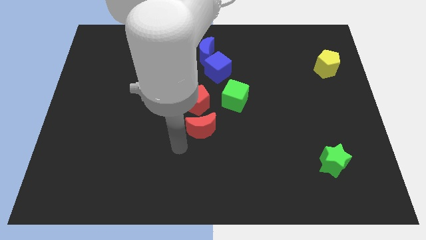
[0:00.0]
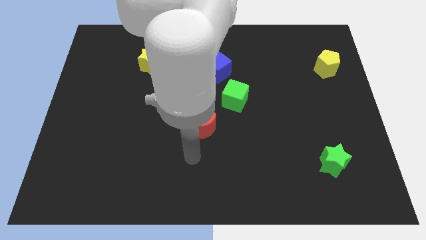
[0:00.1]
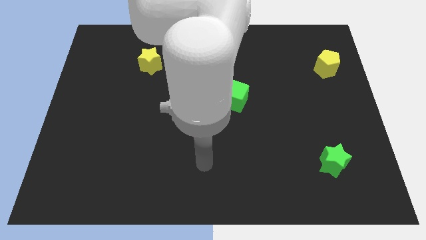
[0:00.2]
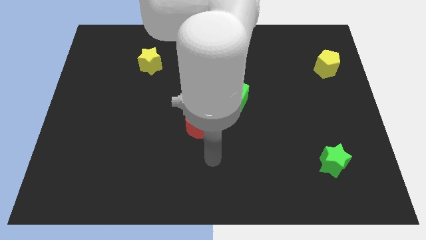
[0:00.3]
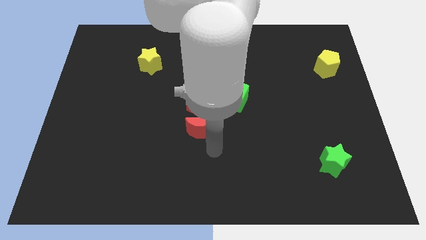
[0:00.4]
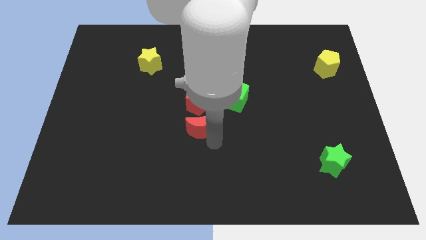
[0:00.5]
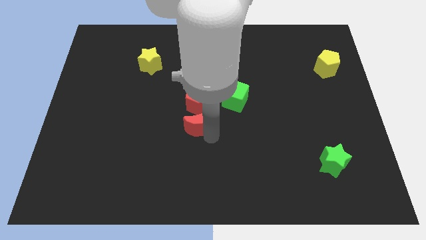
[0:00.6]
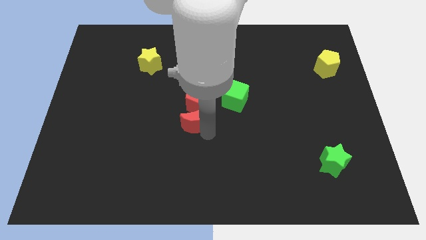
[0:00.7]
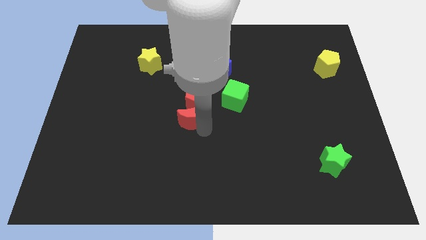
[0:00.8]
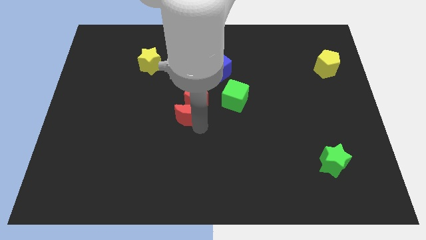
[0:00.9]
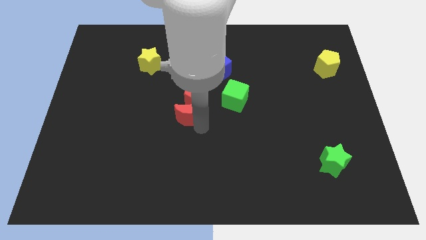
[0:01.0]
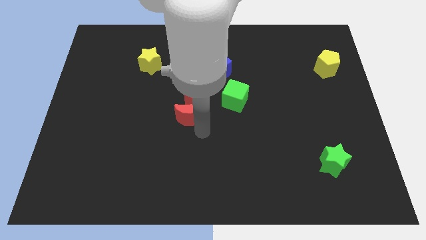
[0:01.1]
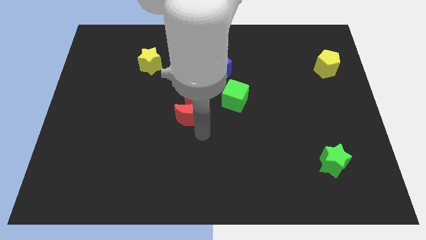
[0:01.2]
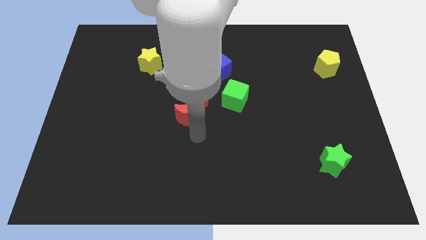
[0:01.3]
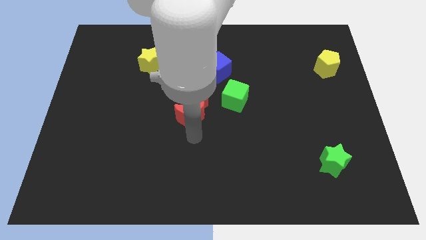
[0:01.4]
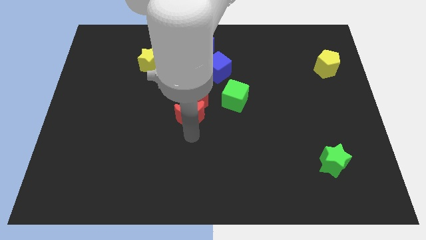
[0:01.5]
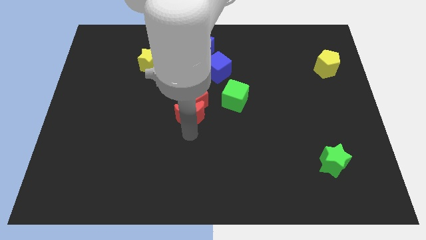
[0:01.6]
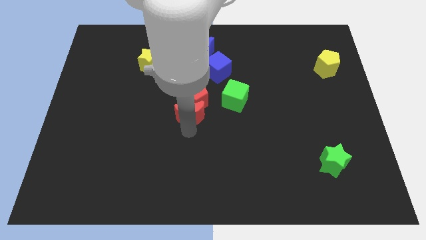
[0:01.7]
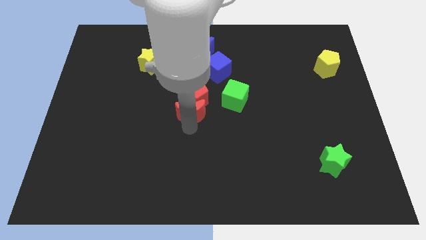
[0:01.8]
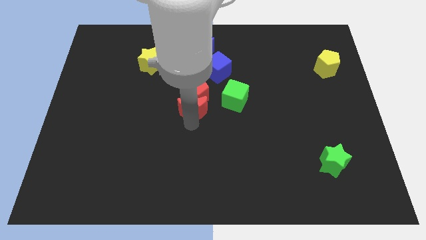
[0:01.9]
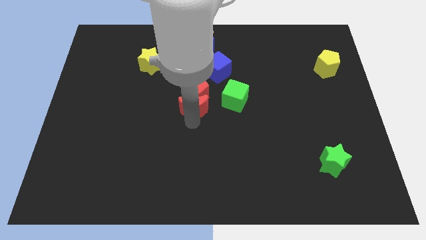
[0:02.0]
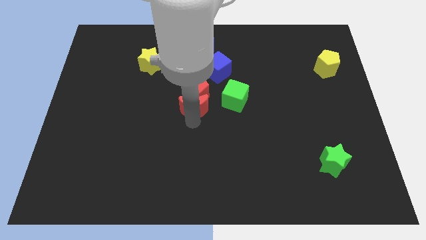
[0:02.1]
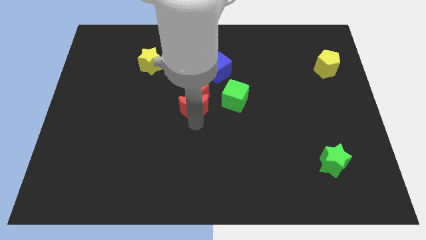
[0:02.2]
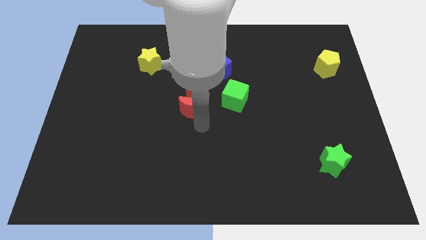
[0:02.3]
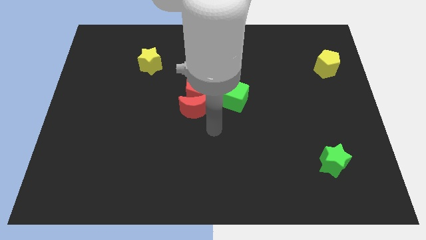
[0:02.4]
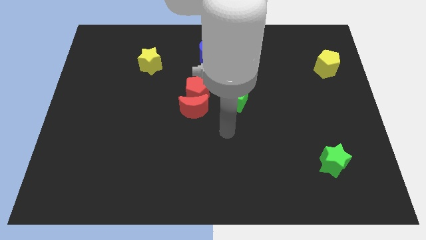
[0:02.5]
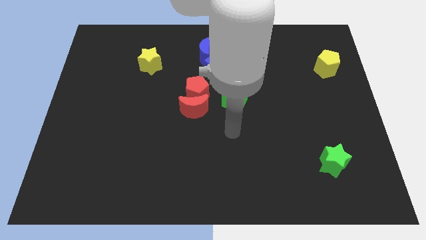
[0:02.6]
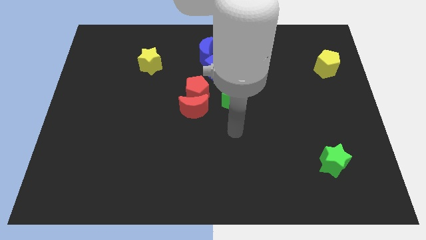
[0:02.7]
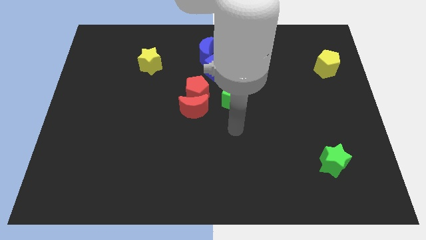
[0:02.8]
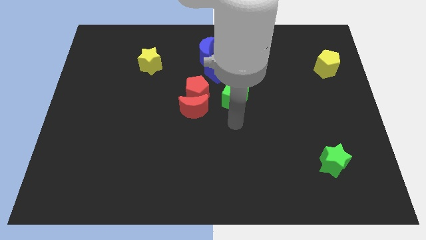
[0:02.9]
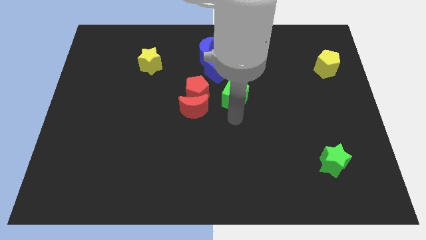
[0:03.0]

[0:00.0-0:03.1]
place the arm down to the green cube

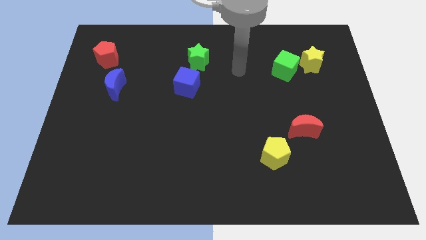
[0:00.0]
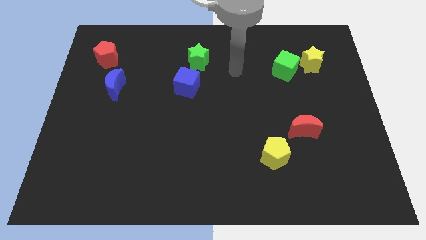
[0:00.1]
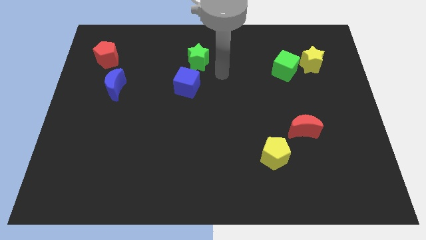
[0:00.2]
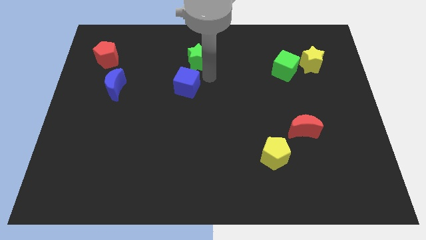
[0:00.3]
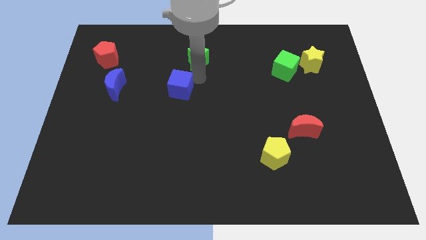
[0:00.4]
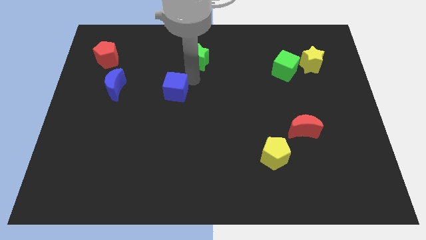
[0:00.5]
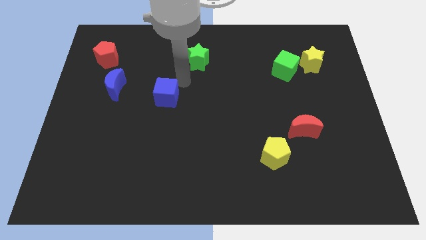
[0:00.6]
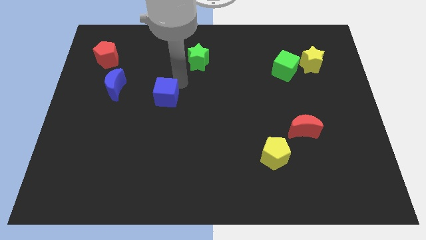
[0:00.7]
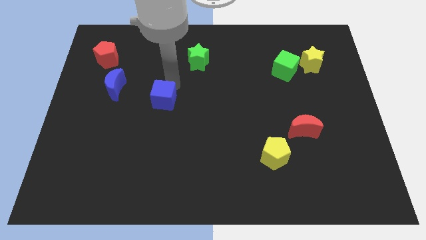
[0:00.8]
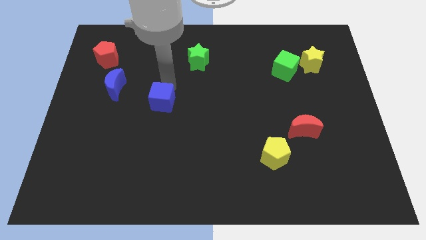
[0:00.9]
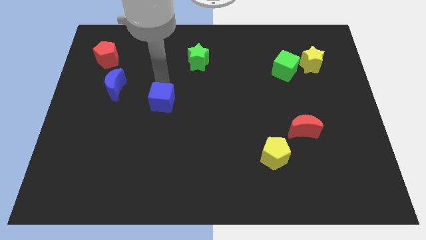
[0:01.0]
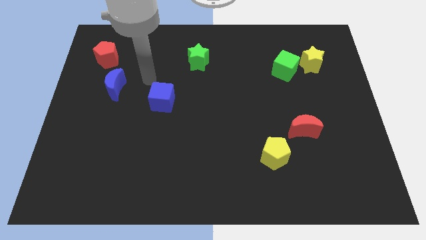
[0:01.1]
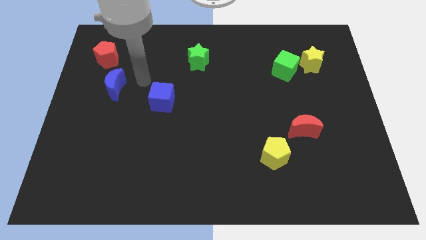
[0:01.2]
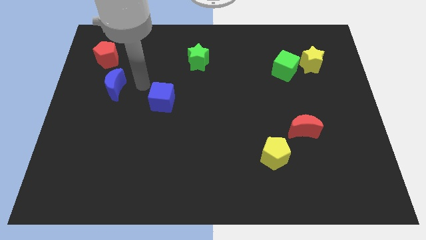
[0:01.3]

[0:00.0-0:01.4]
push the blue cube slightly to the bottom

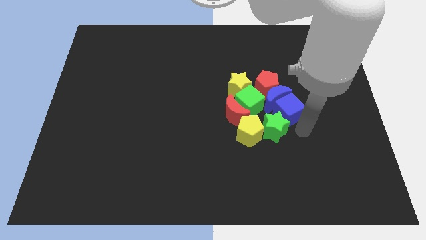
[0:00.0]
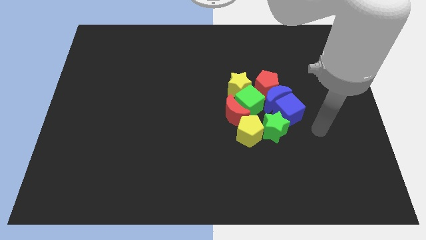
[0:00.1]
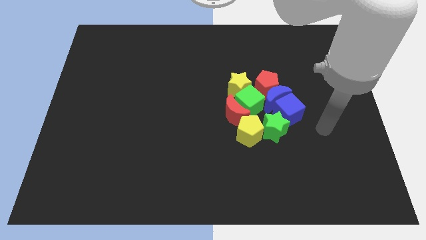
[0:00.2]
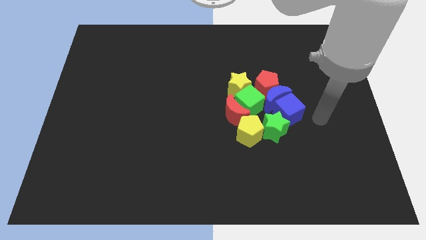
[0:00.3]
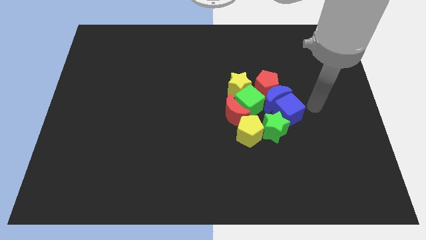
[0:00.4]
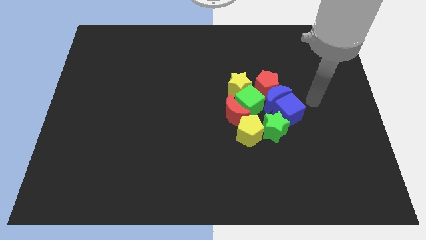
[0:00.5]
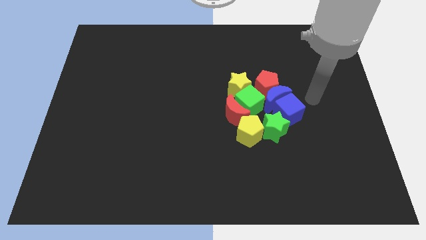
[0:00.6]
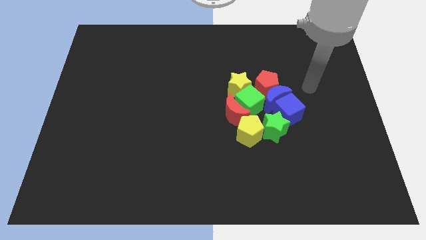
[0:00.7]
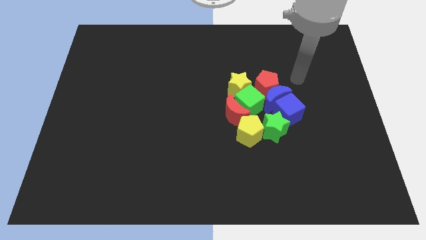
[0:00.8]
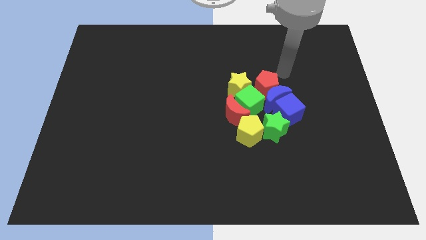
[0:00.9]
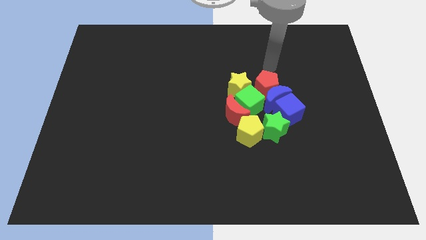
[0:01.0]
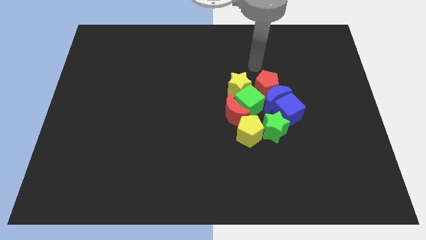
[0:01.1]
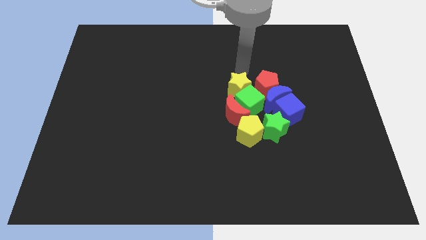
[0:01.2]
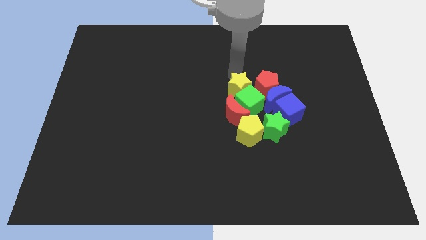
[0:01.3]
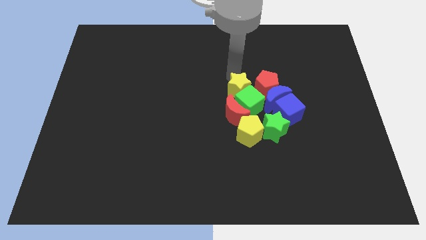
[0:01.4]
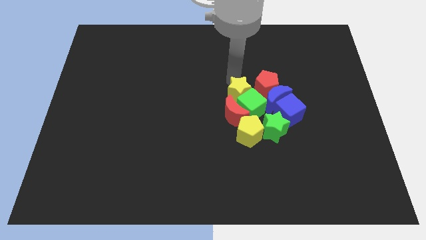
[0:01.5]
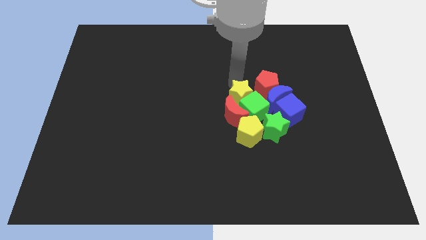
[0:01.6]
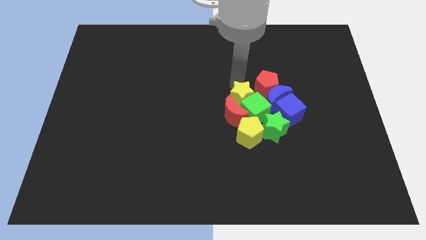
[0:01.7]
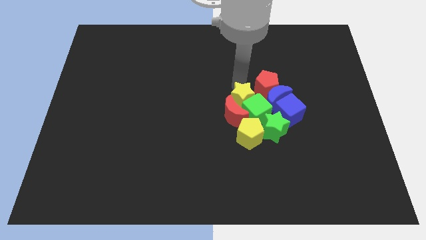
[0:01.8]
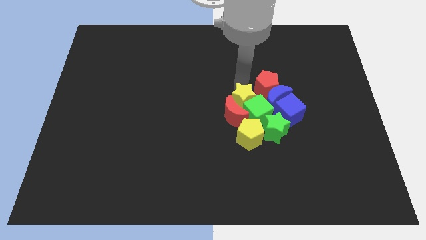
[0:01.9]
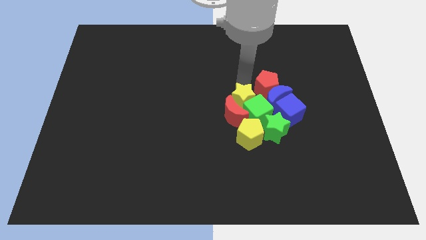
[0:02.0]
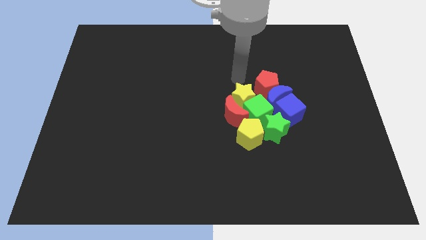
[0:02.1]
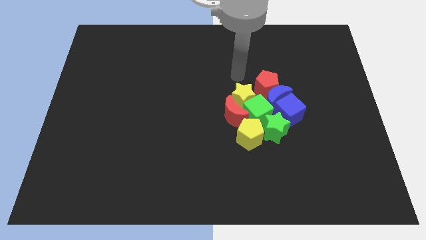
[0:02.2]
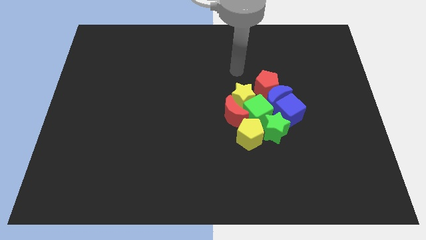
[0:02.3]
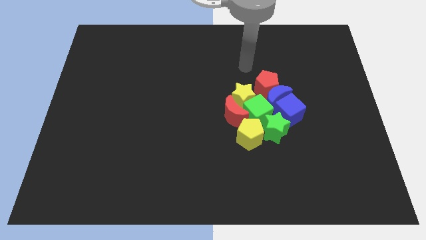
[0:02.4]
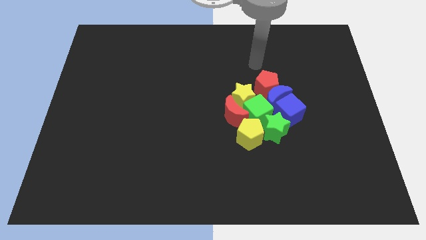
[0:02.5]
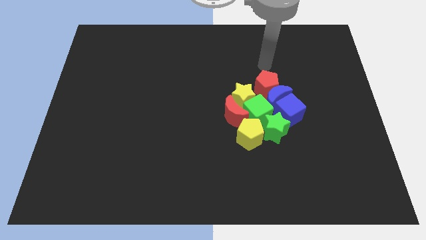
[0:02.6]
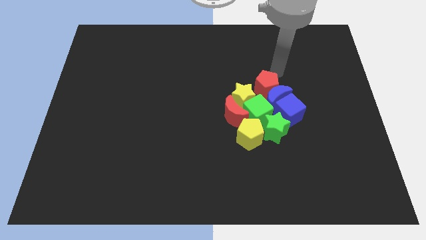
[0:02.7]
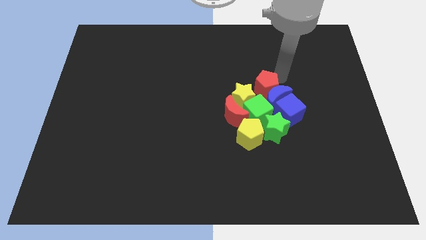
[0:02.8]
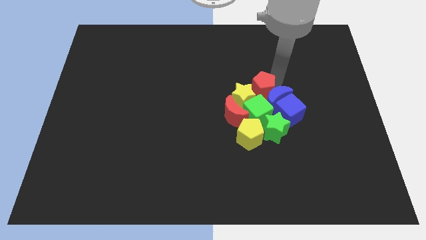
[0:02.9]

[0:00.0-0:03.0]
move yellow star into green cube

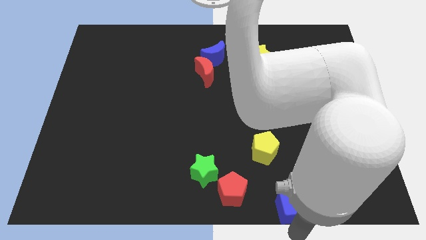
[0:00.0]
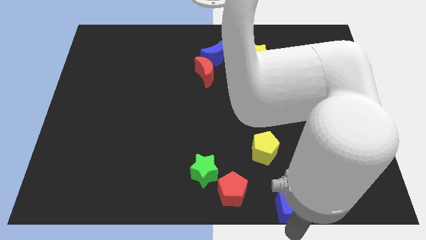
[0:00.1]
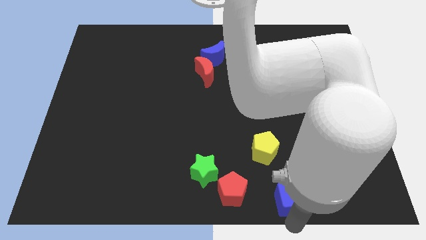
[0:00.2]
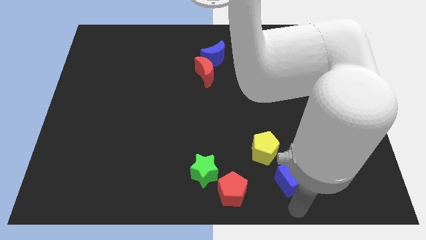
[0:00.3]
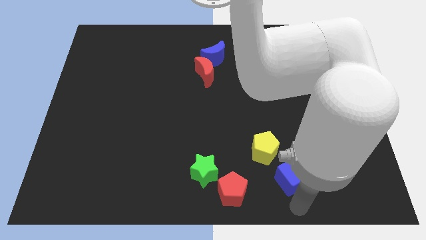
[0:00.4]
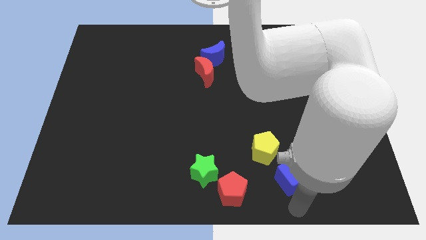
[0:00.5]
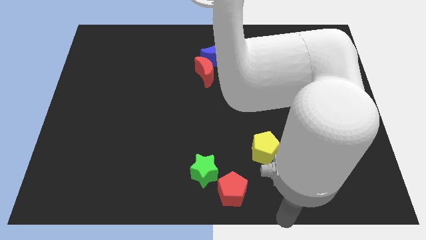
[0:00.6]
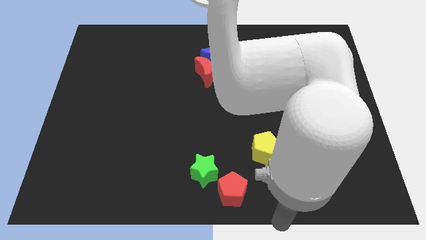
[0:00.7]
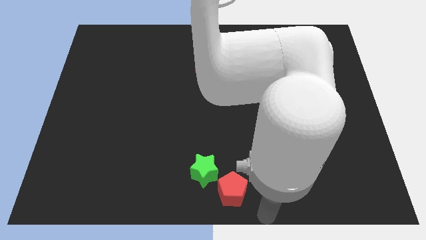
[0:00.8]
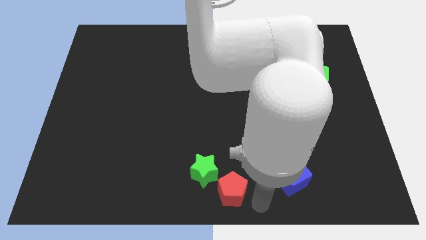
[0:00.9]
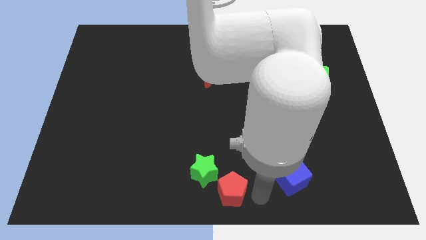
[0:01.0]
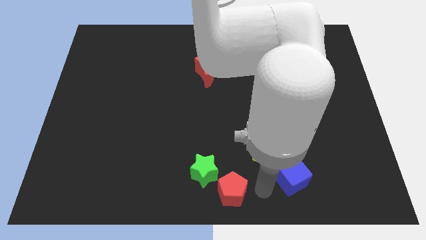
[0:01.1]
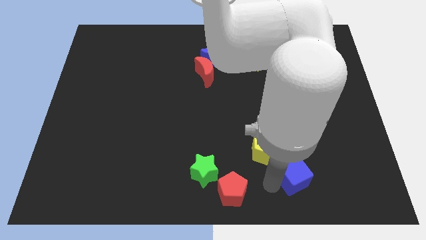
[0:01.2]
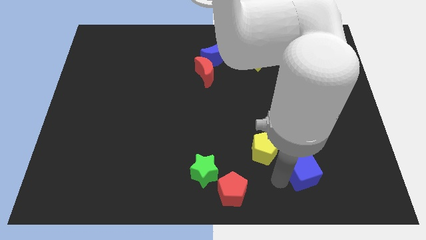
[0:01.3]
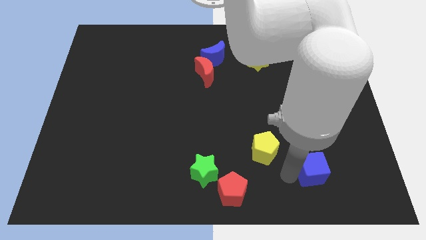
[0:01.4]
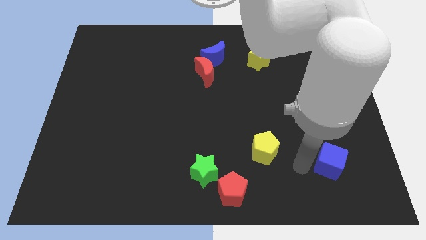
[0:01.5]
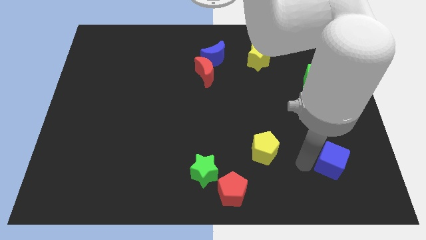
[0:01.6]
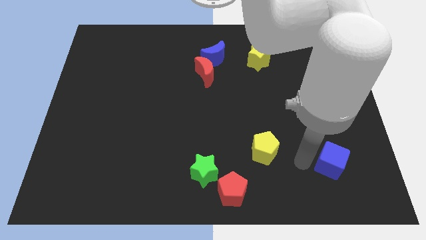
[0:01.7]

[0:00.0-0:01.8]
push the blue cube towards the right of the yellow pentagon
